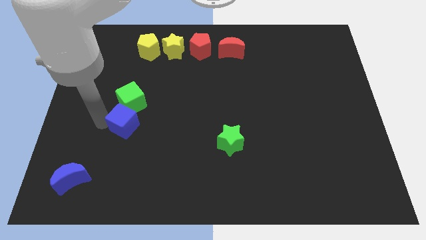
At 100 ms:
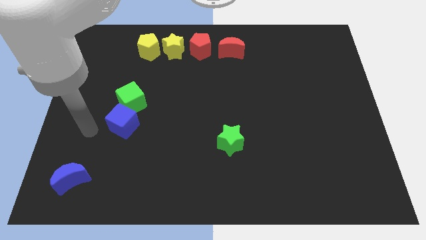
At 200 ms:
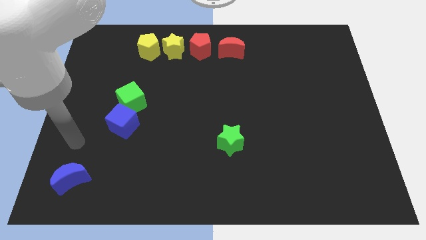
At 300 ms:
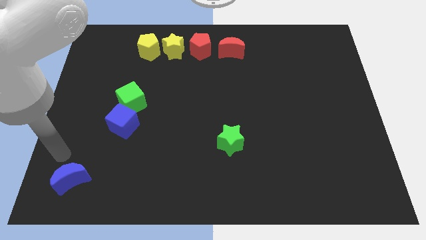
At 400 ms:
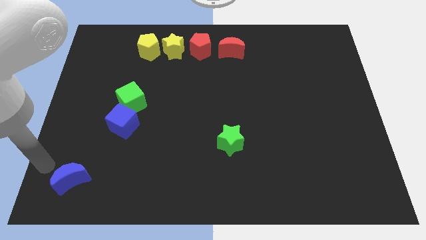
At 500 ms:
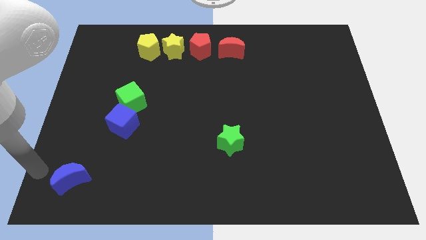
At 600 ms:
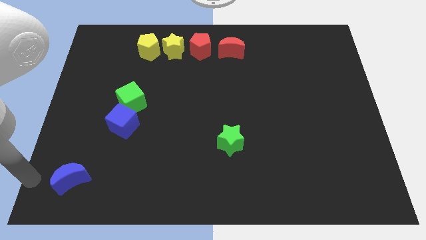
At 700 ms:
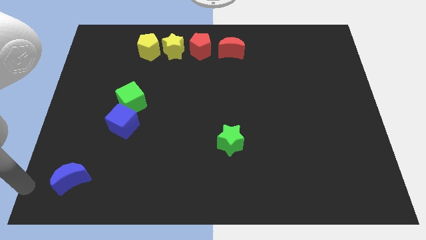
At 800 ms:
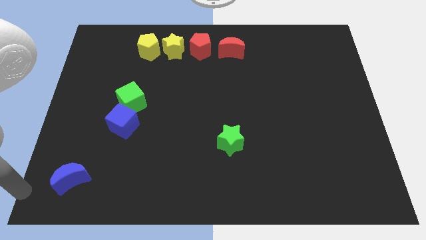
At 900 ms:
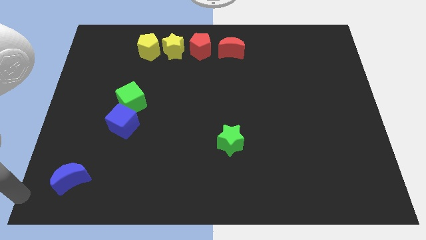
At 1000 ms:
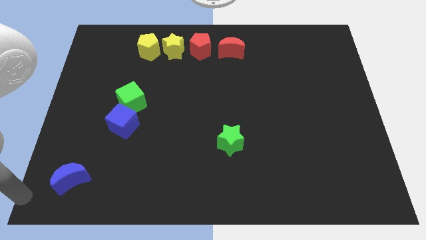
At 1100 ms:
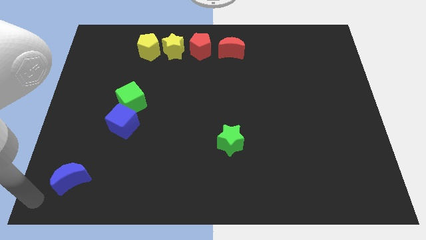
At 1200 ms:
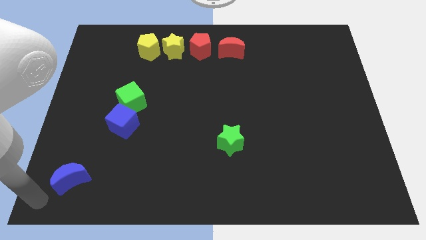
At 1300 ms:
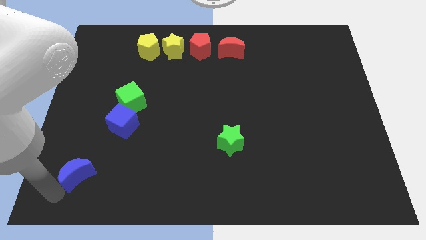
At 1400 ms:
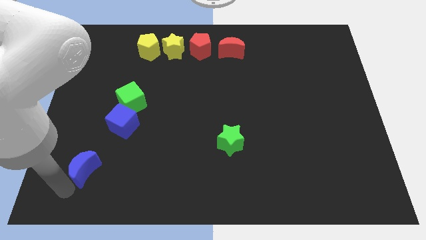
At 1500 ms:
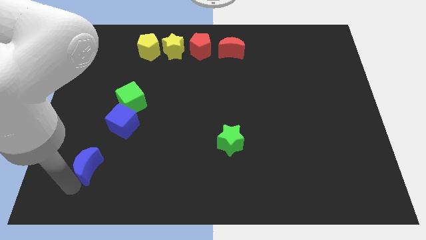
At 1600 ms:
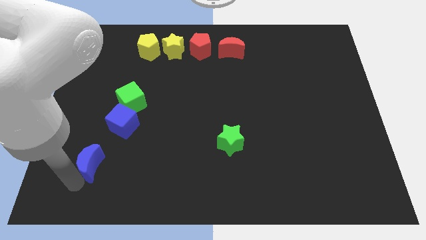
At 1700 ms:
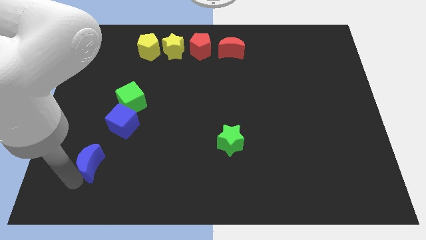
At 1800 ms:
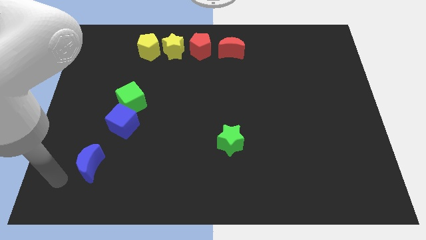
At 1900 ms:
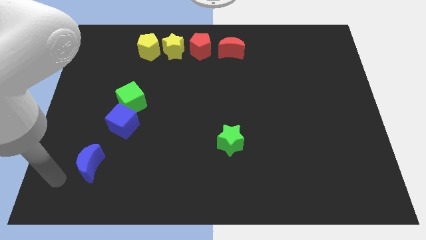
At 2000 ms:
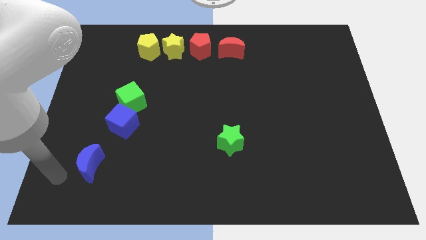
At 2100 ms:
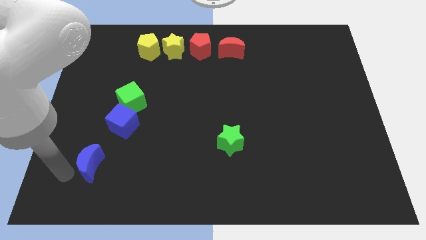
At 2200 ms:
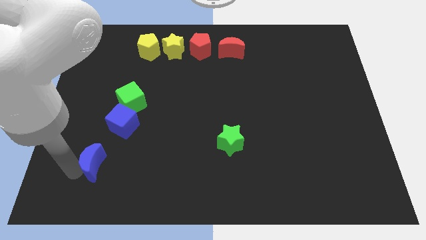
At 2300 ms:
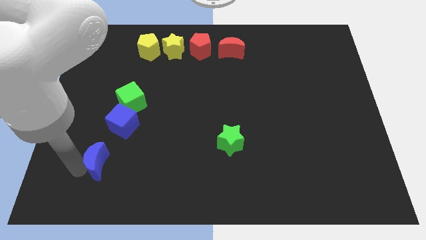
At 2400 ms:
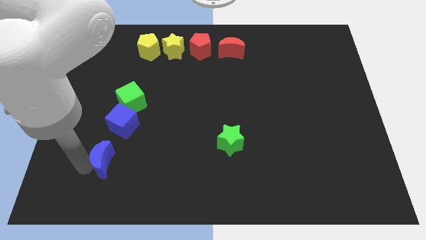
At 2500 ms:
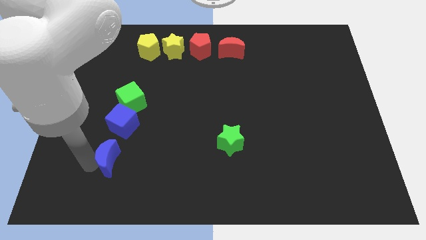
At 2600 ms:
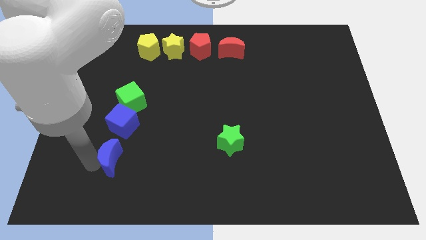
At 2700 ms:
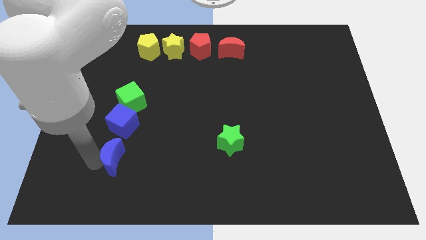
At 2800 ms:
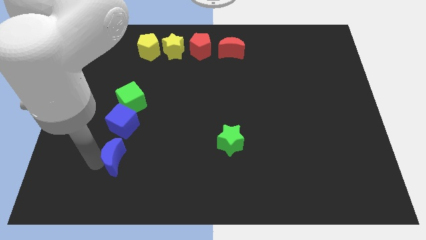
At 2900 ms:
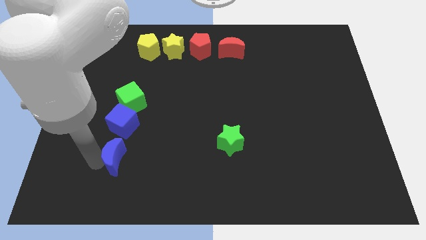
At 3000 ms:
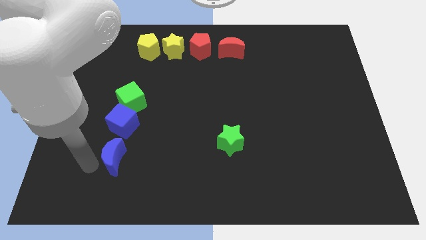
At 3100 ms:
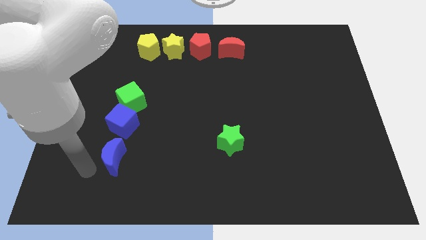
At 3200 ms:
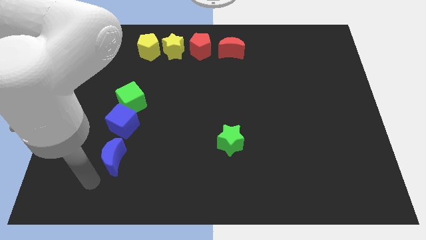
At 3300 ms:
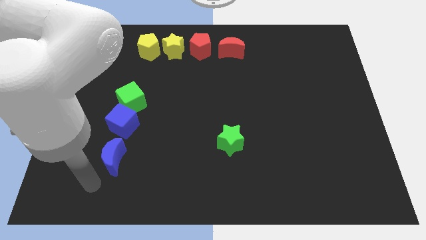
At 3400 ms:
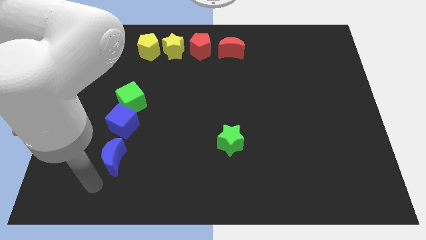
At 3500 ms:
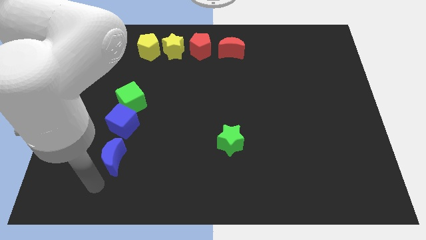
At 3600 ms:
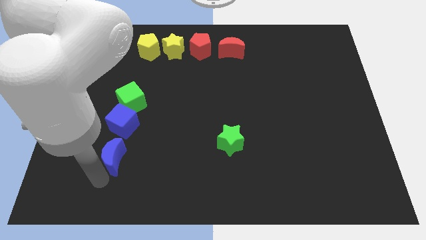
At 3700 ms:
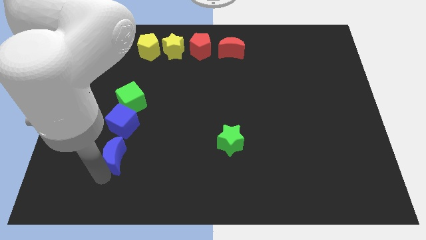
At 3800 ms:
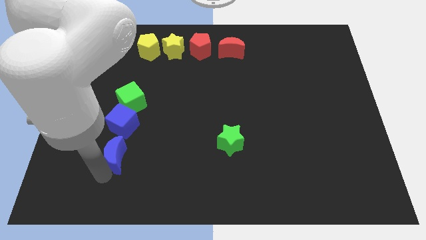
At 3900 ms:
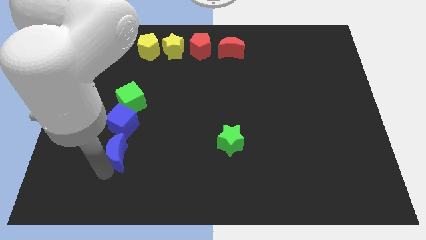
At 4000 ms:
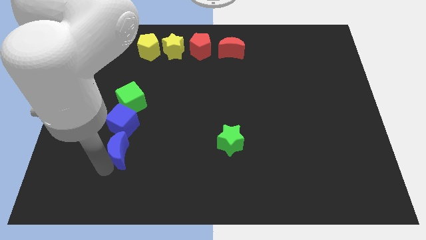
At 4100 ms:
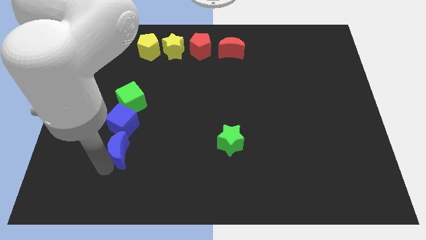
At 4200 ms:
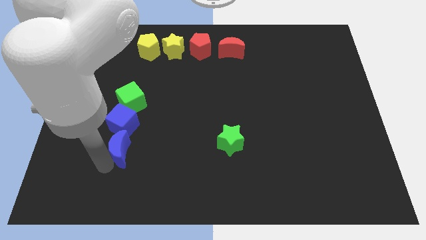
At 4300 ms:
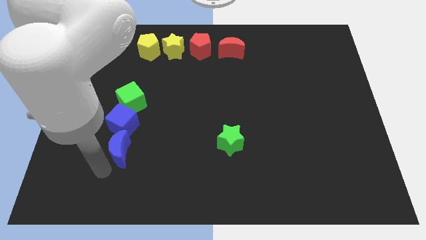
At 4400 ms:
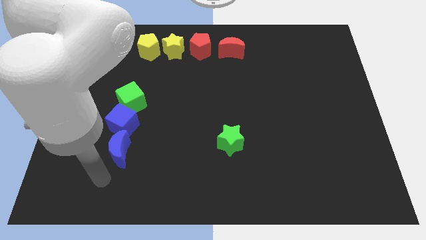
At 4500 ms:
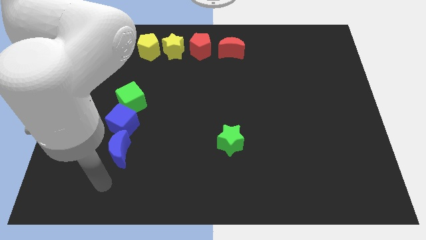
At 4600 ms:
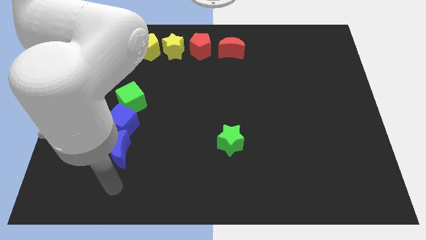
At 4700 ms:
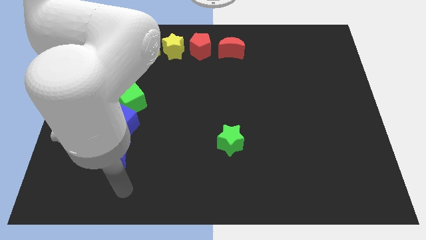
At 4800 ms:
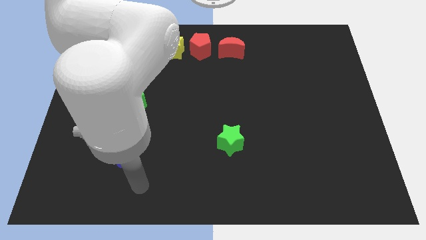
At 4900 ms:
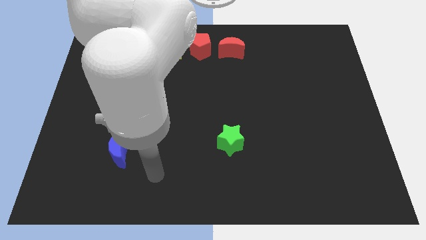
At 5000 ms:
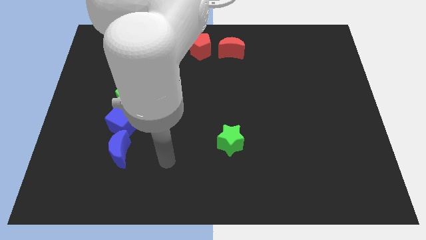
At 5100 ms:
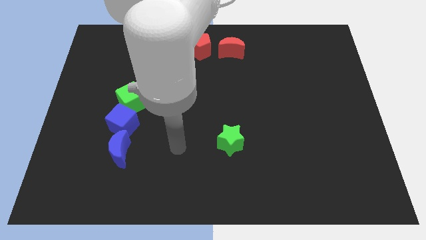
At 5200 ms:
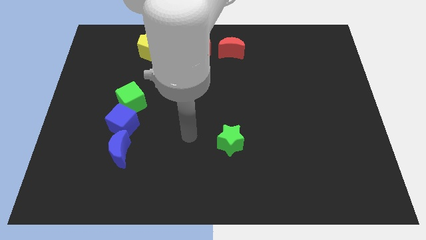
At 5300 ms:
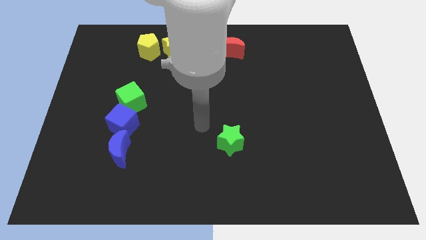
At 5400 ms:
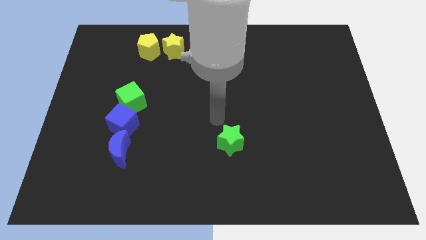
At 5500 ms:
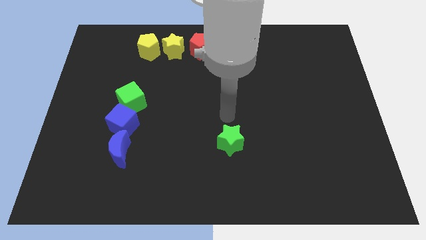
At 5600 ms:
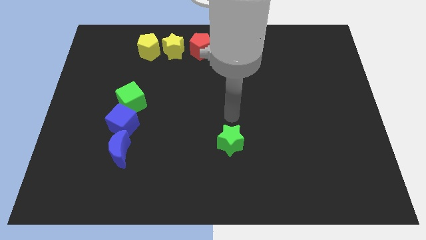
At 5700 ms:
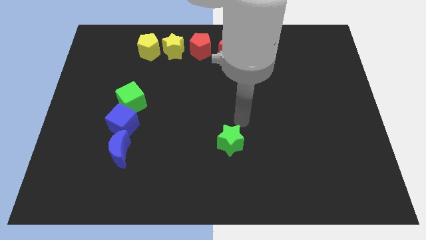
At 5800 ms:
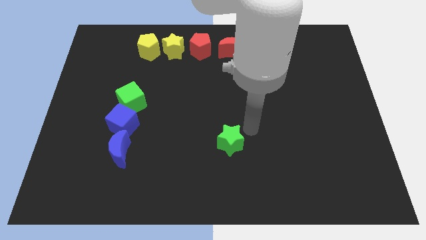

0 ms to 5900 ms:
move the blue crescent to the bottom side of the blue cube

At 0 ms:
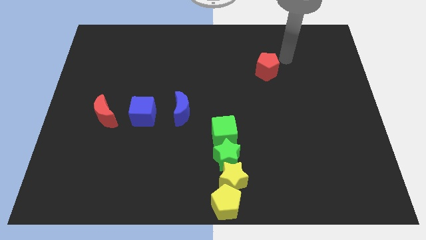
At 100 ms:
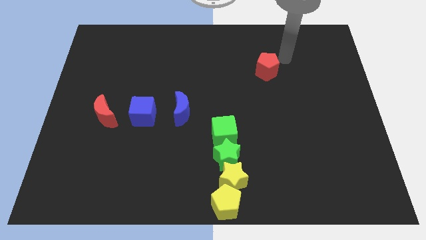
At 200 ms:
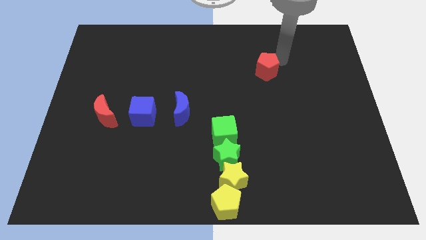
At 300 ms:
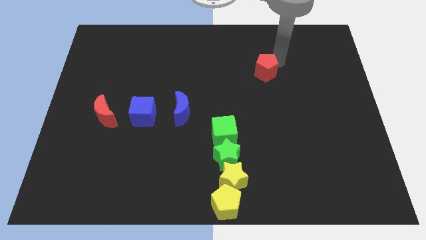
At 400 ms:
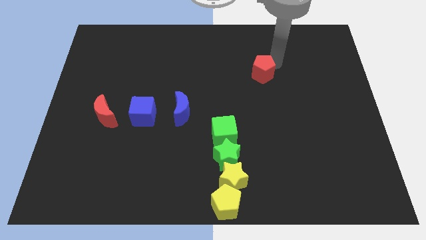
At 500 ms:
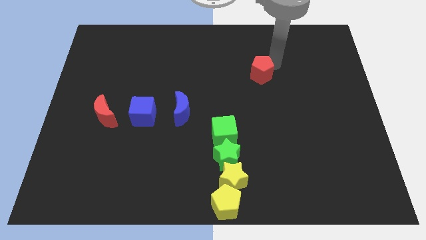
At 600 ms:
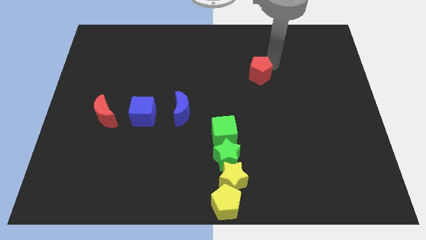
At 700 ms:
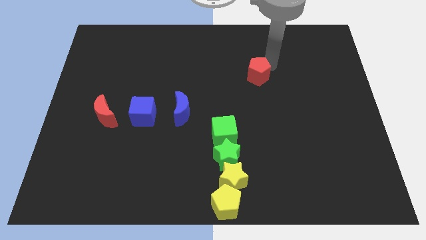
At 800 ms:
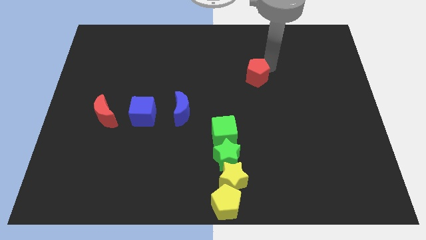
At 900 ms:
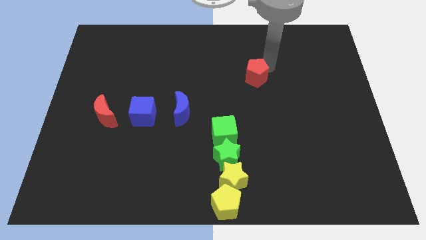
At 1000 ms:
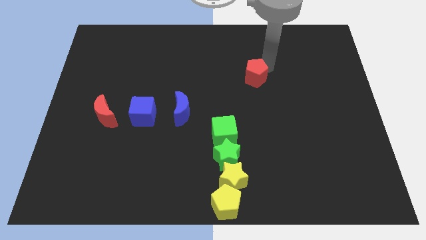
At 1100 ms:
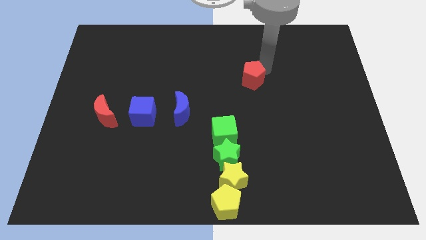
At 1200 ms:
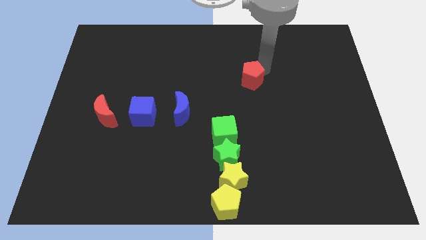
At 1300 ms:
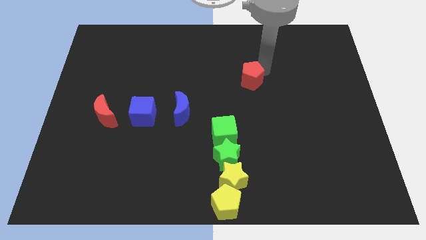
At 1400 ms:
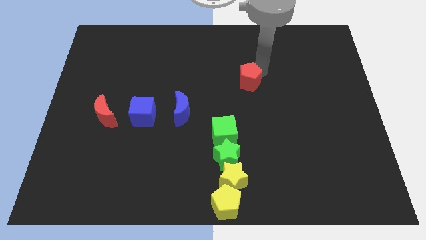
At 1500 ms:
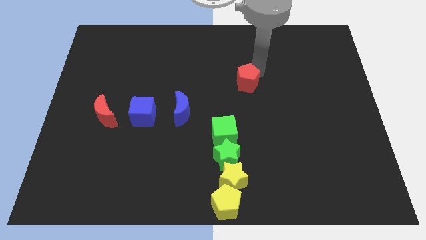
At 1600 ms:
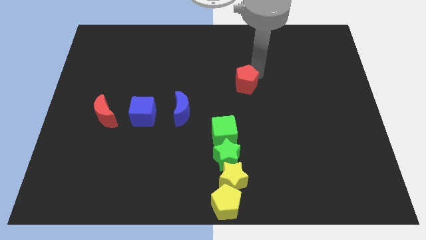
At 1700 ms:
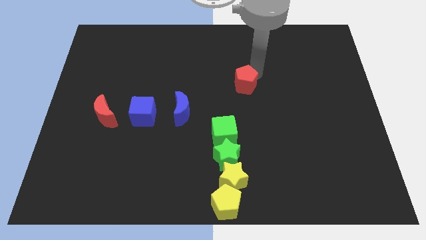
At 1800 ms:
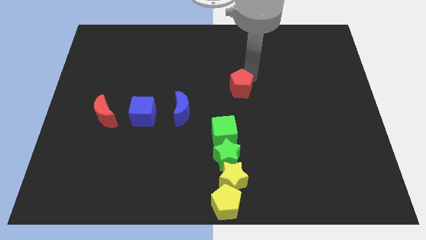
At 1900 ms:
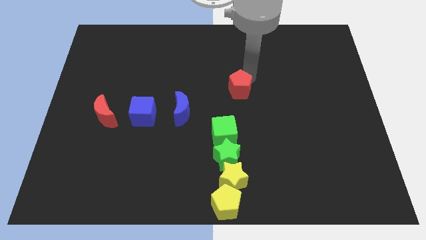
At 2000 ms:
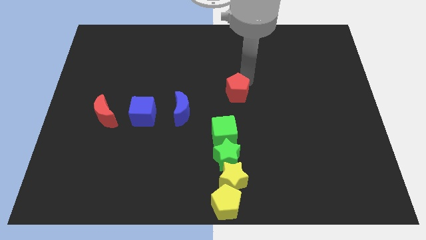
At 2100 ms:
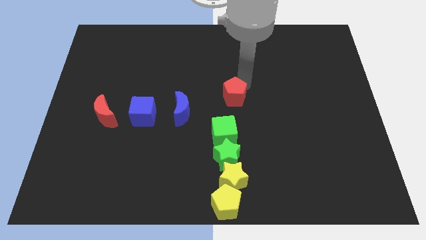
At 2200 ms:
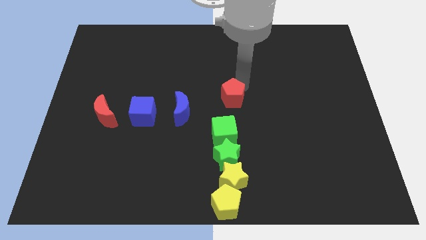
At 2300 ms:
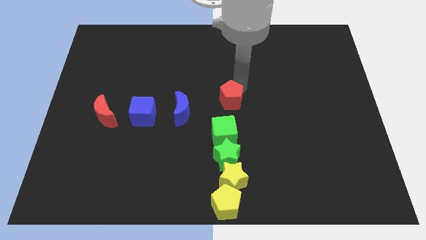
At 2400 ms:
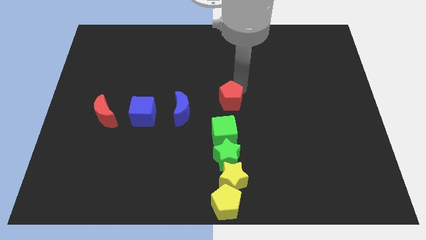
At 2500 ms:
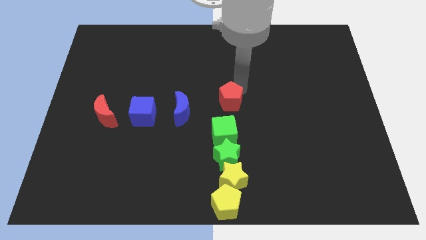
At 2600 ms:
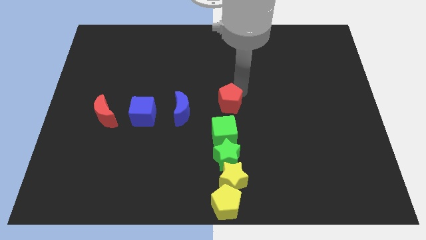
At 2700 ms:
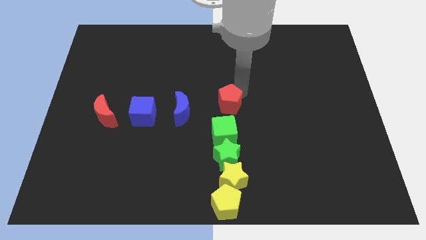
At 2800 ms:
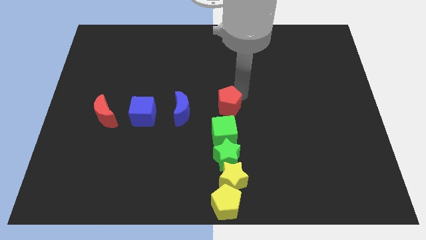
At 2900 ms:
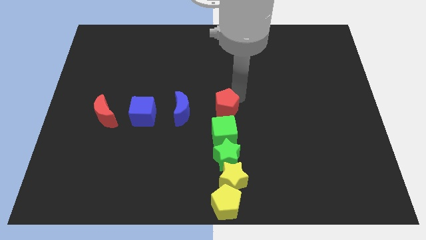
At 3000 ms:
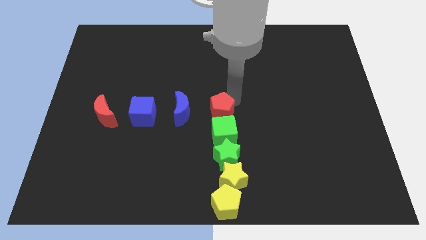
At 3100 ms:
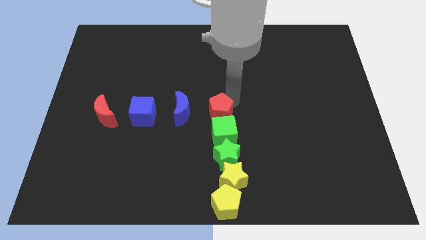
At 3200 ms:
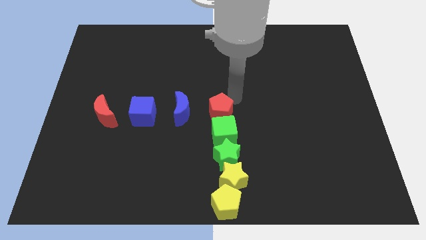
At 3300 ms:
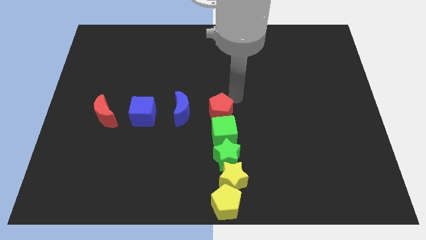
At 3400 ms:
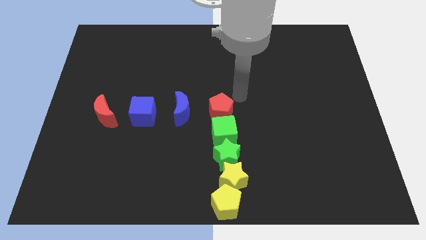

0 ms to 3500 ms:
place the red pentagon at the top side of the green cube
